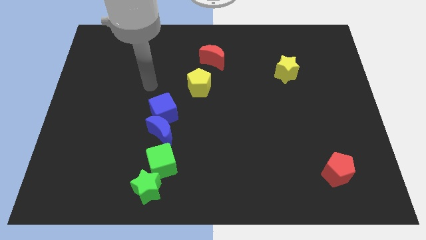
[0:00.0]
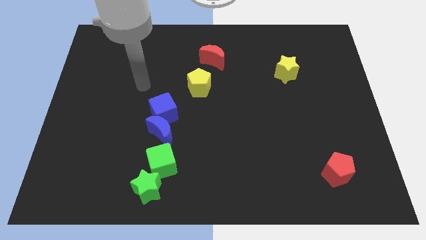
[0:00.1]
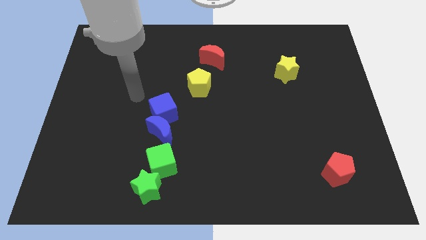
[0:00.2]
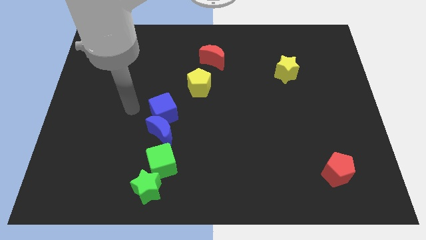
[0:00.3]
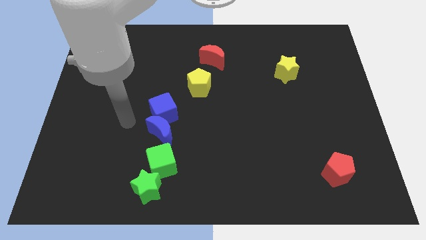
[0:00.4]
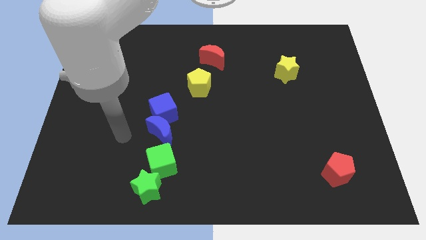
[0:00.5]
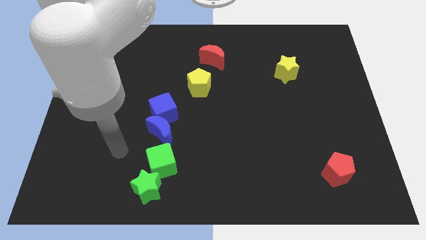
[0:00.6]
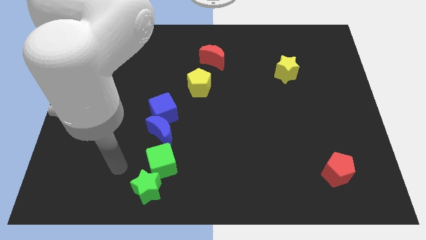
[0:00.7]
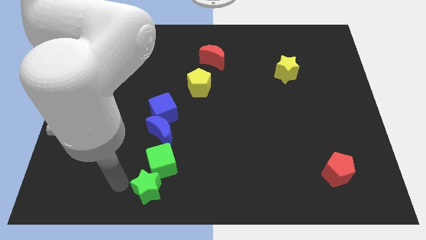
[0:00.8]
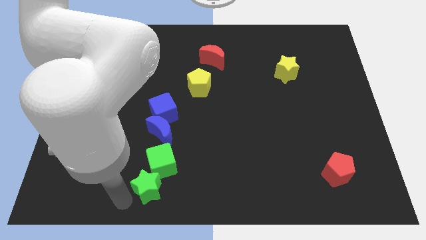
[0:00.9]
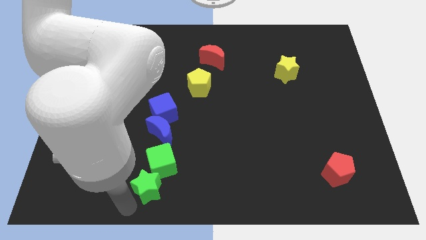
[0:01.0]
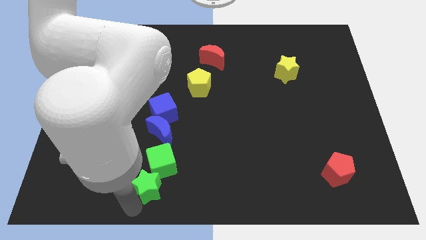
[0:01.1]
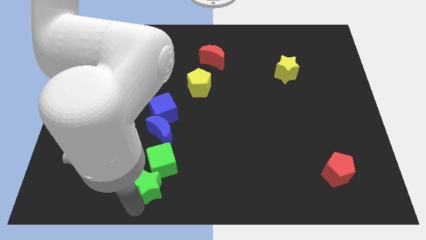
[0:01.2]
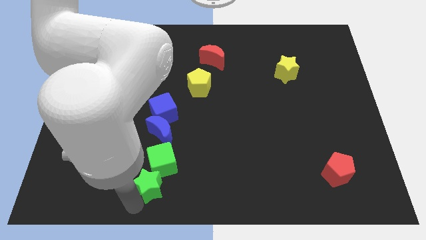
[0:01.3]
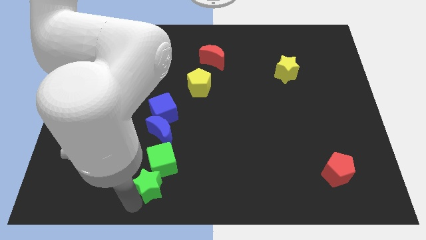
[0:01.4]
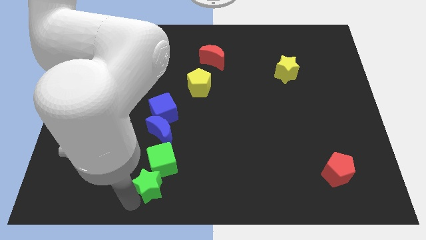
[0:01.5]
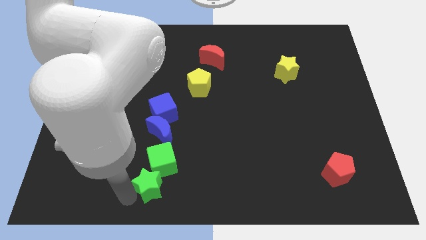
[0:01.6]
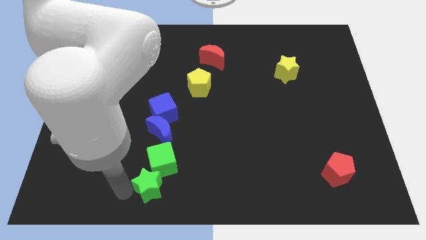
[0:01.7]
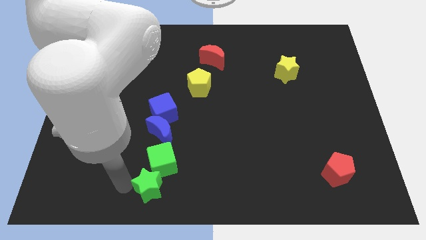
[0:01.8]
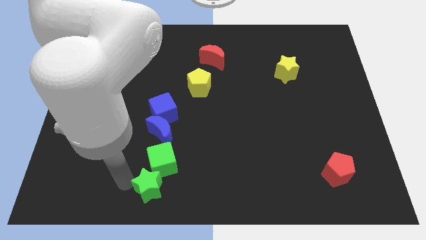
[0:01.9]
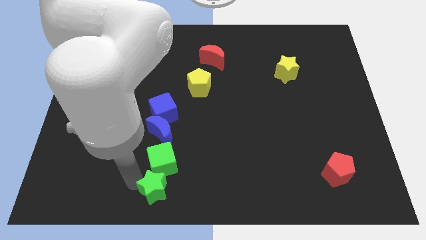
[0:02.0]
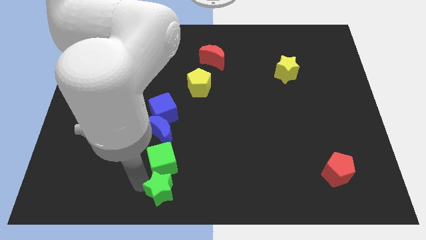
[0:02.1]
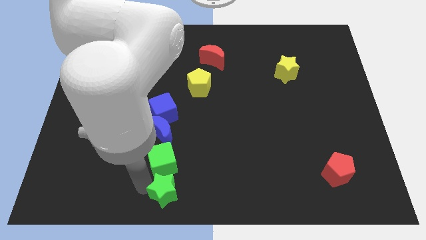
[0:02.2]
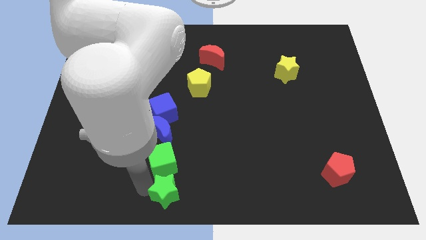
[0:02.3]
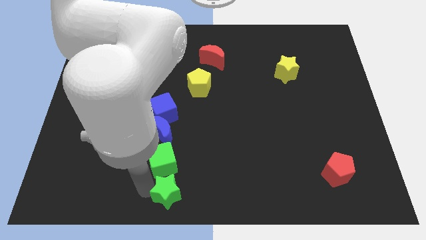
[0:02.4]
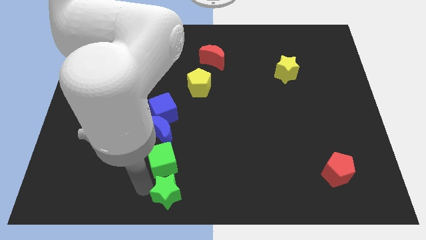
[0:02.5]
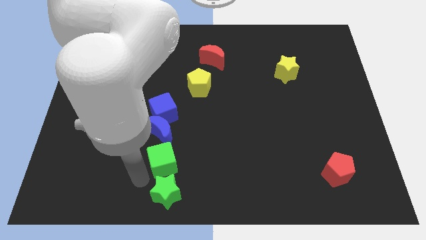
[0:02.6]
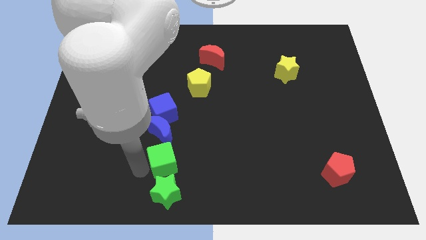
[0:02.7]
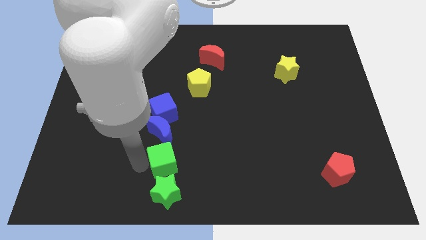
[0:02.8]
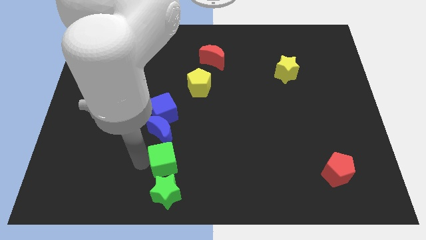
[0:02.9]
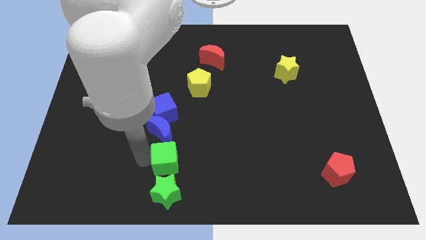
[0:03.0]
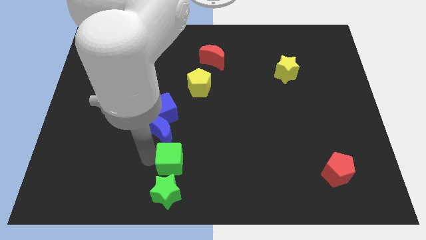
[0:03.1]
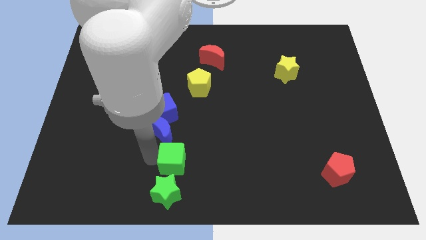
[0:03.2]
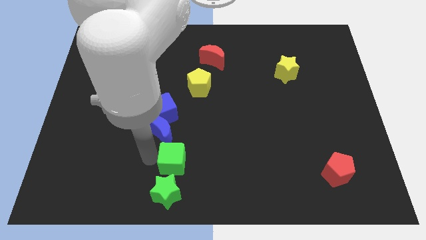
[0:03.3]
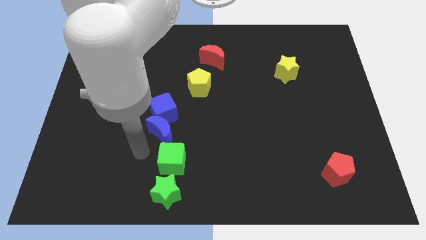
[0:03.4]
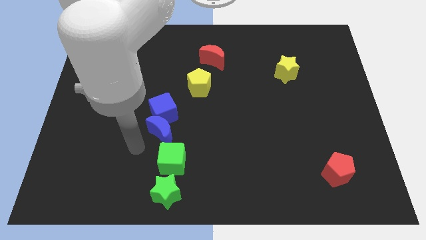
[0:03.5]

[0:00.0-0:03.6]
move the two green blocks to the right to form a vertical line of blocks

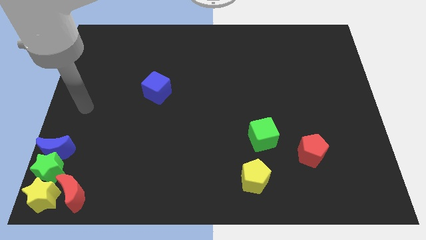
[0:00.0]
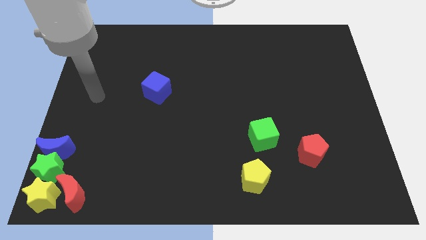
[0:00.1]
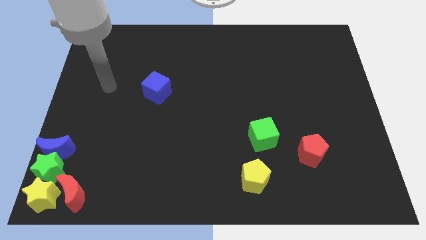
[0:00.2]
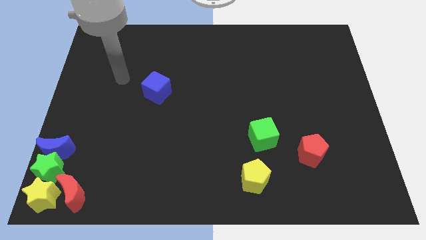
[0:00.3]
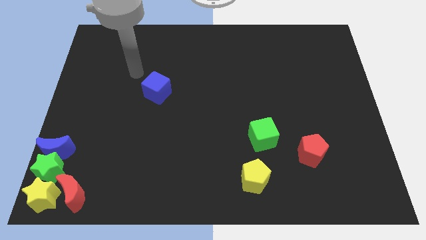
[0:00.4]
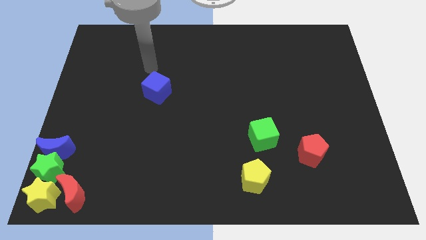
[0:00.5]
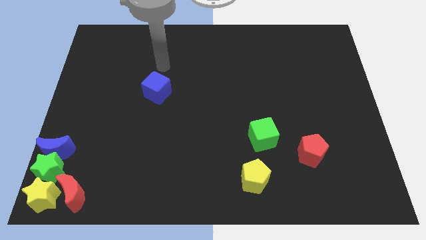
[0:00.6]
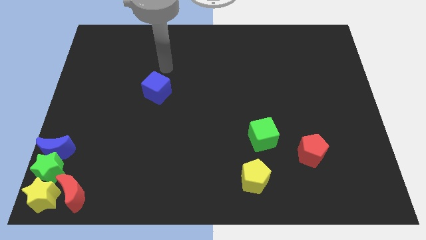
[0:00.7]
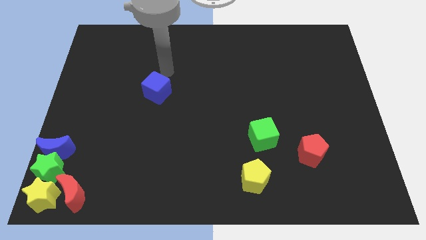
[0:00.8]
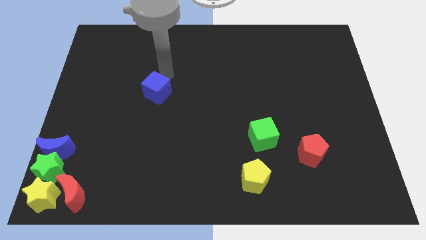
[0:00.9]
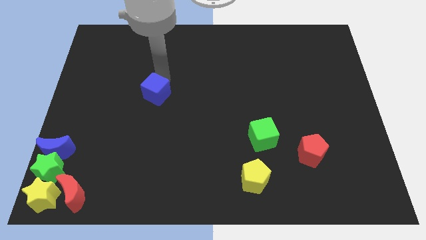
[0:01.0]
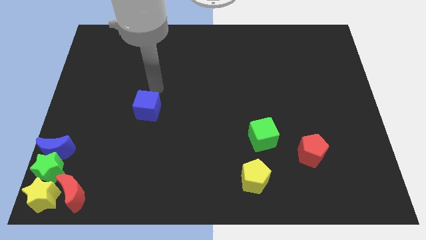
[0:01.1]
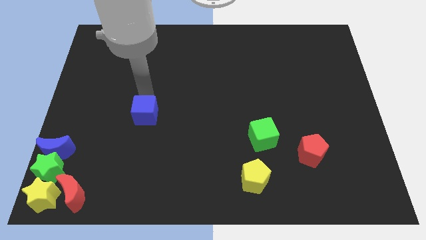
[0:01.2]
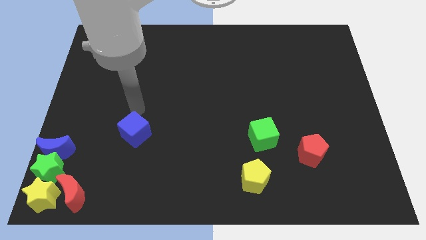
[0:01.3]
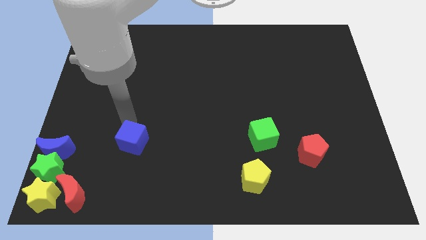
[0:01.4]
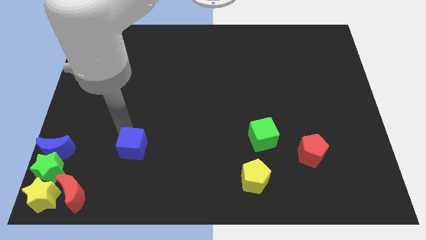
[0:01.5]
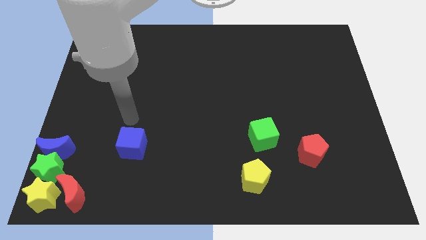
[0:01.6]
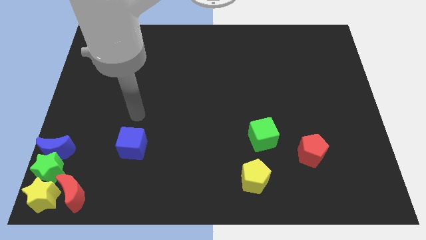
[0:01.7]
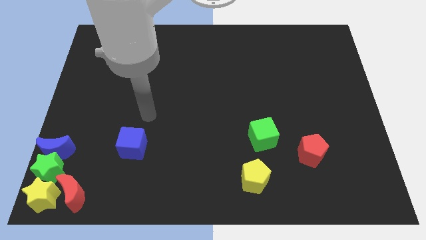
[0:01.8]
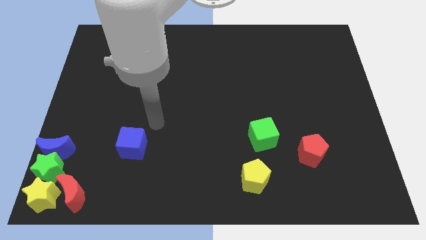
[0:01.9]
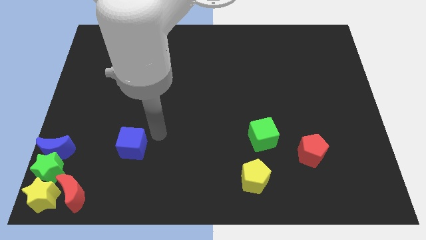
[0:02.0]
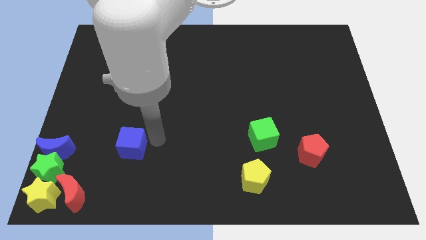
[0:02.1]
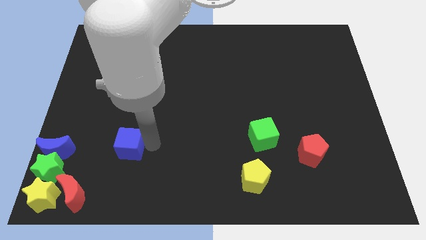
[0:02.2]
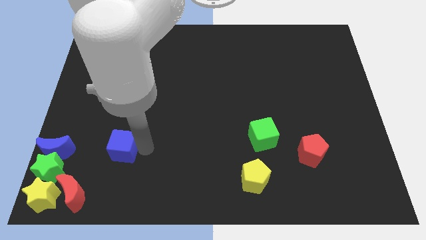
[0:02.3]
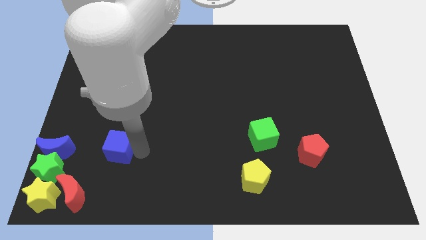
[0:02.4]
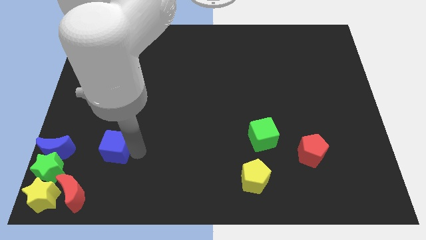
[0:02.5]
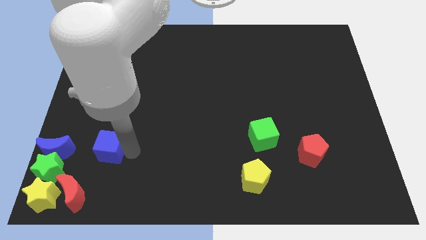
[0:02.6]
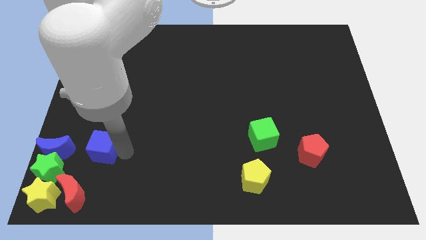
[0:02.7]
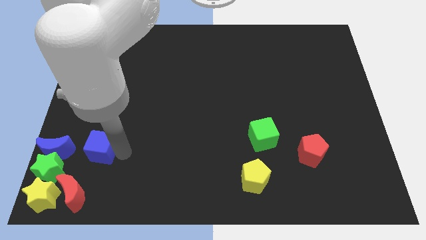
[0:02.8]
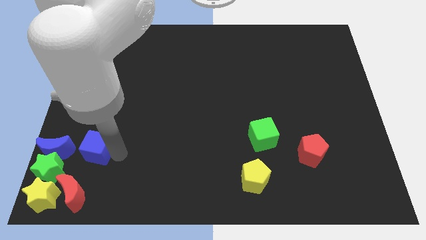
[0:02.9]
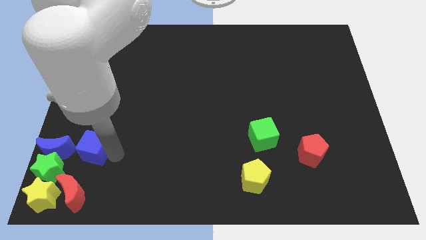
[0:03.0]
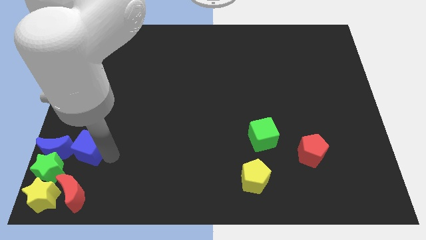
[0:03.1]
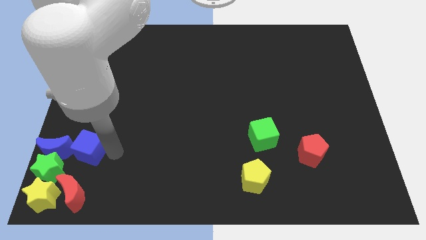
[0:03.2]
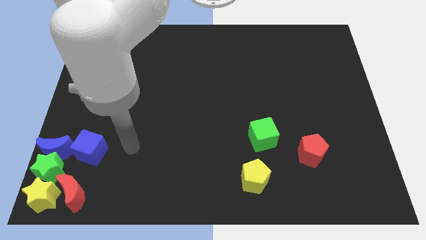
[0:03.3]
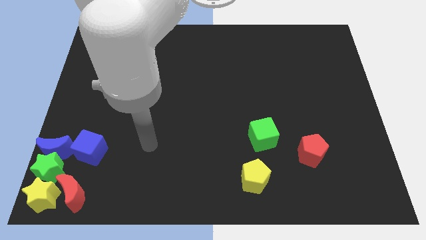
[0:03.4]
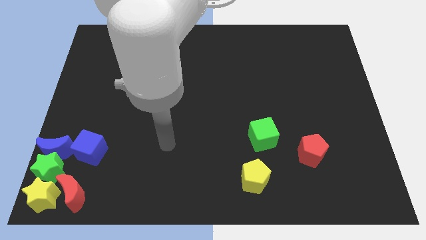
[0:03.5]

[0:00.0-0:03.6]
put the blue cube on the right side of the blue moon

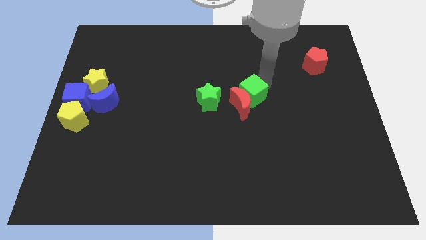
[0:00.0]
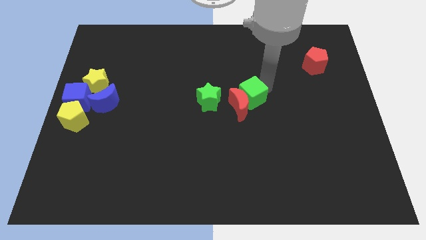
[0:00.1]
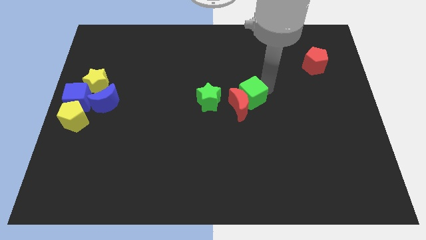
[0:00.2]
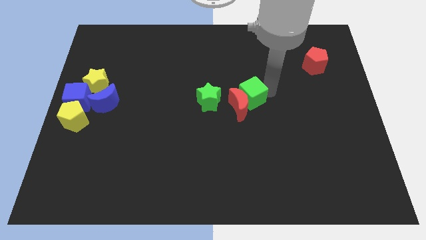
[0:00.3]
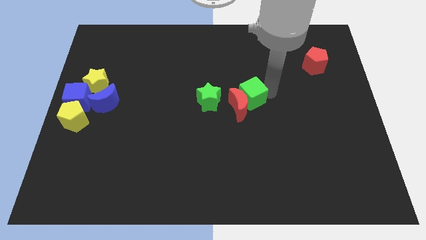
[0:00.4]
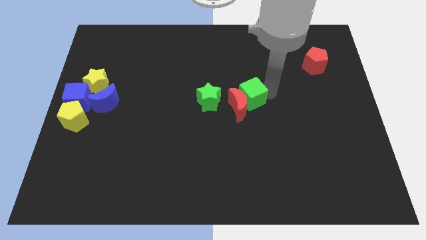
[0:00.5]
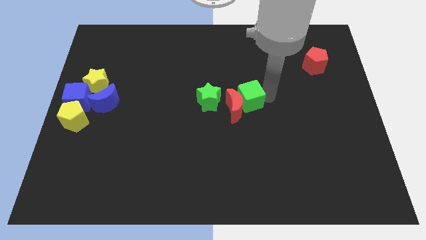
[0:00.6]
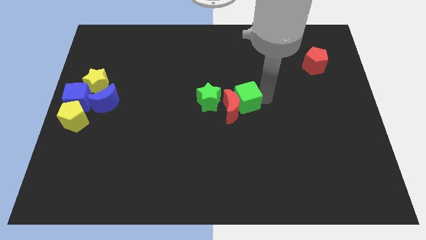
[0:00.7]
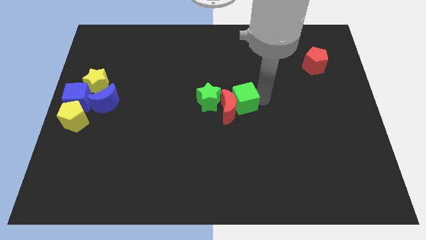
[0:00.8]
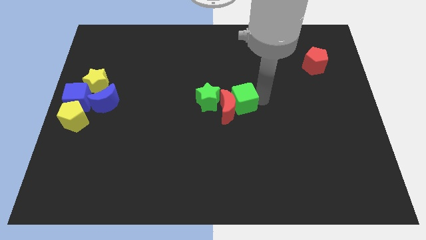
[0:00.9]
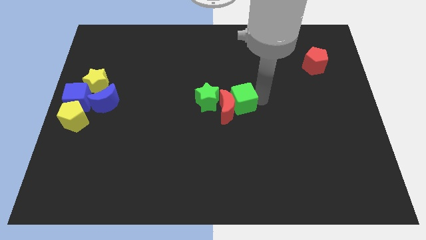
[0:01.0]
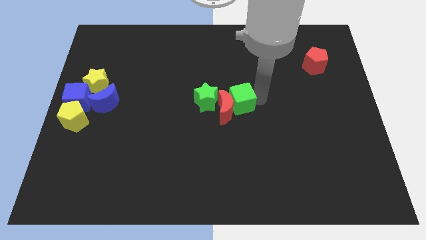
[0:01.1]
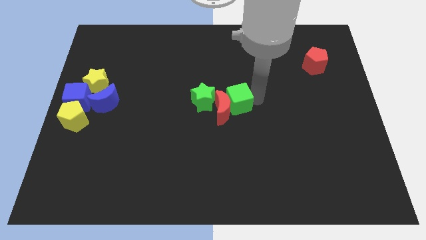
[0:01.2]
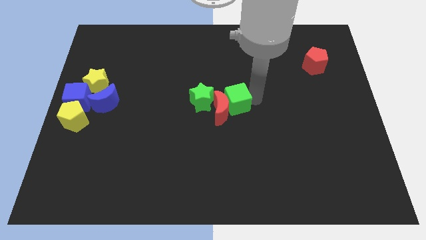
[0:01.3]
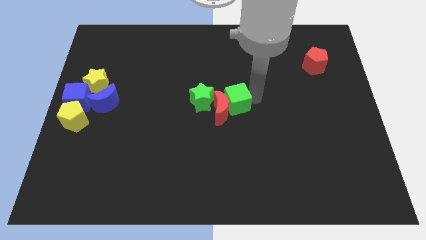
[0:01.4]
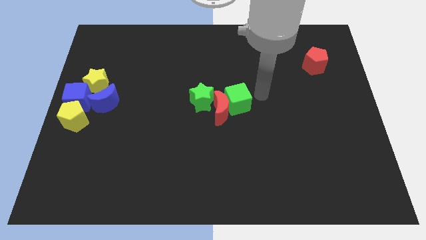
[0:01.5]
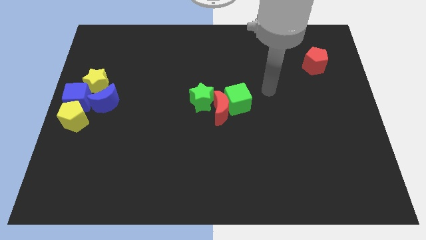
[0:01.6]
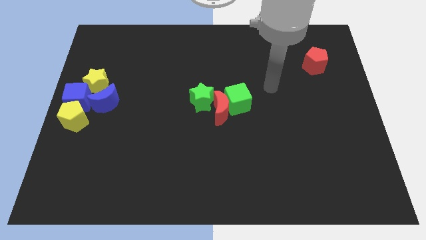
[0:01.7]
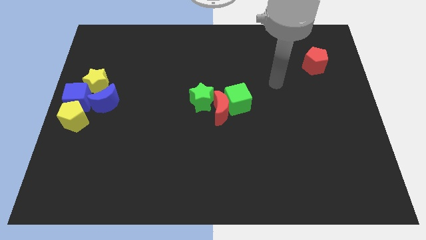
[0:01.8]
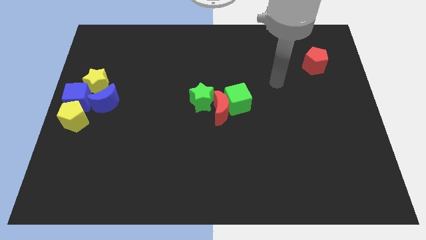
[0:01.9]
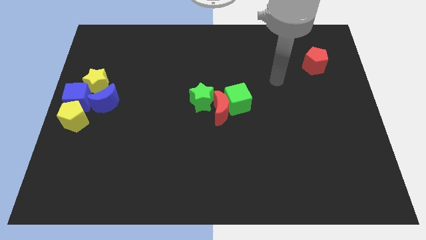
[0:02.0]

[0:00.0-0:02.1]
push the green cube along with the red moon into the green star
